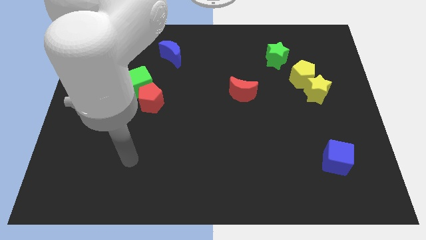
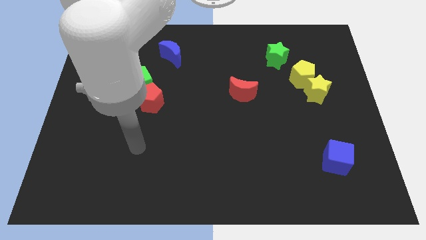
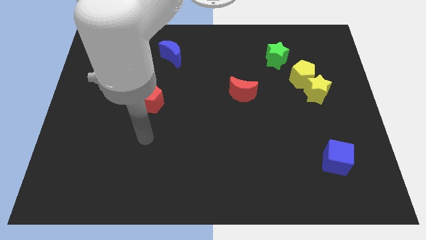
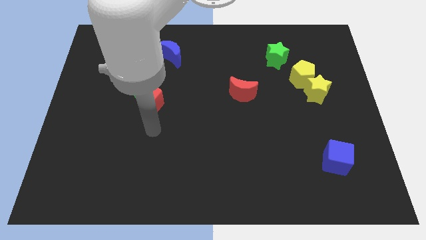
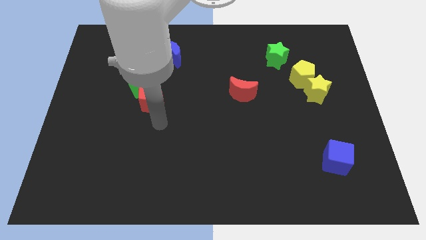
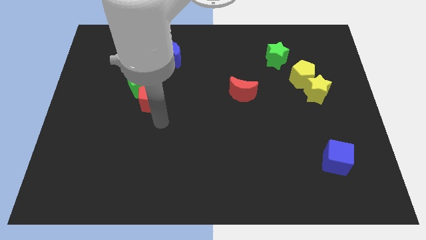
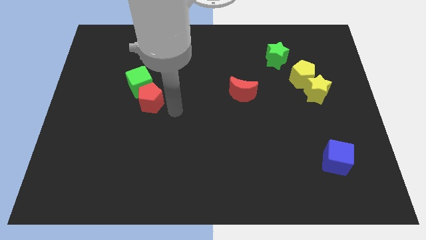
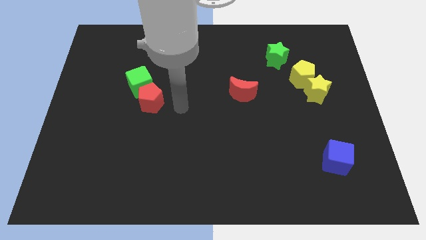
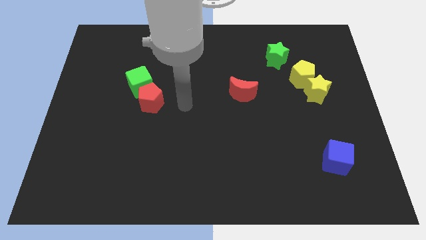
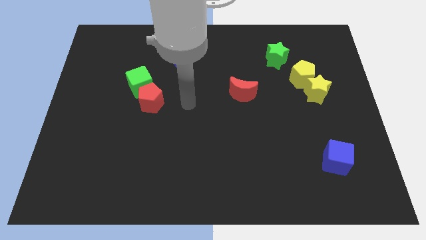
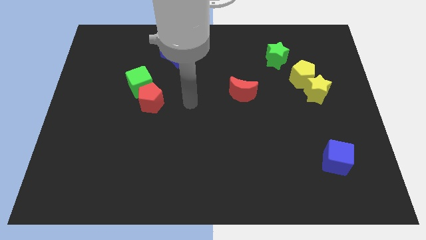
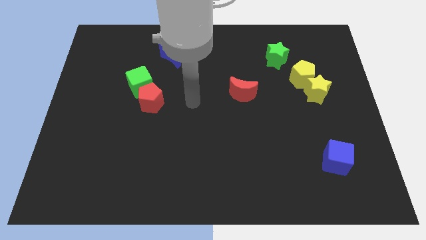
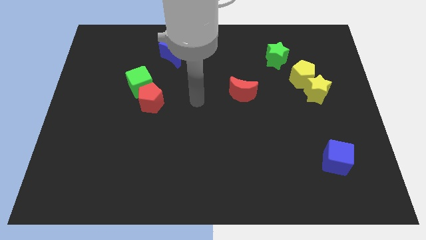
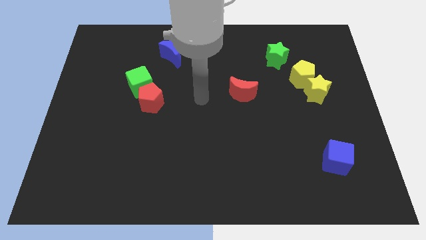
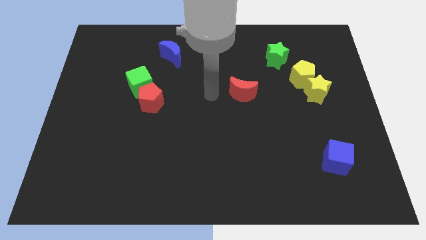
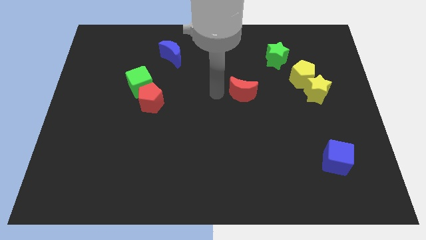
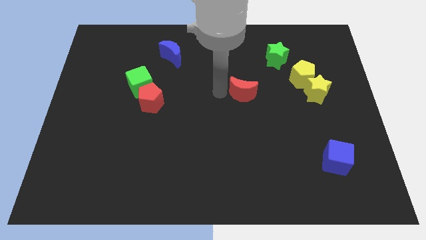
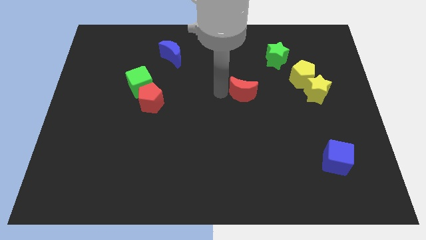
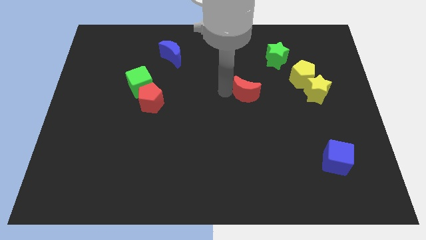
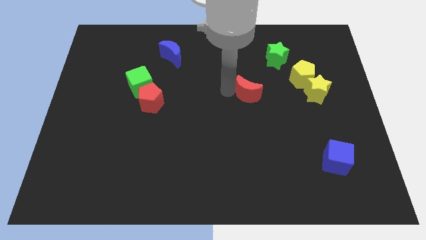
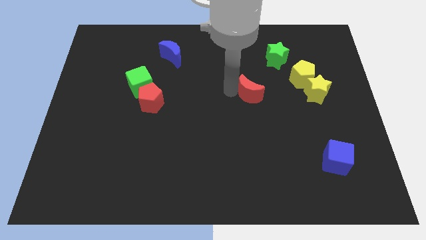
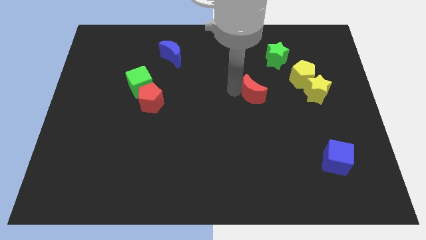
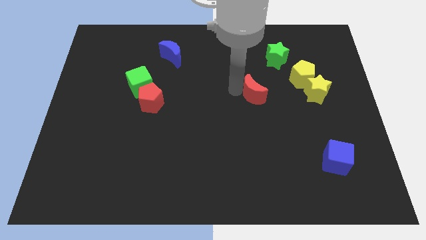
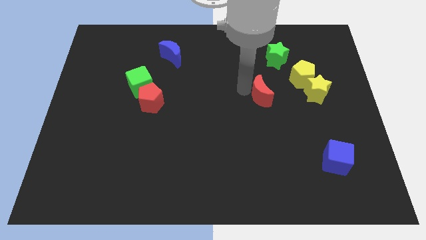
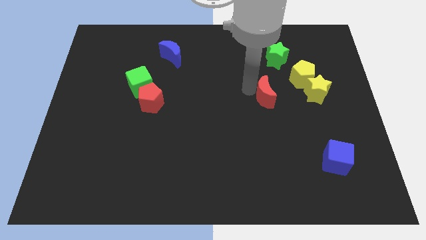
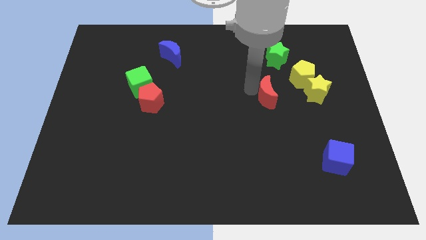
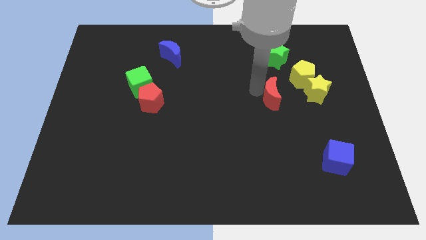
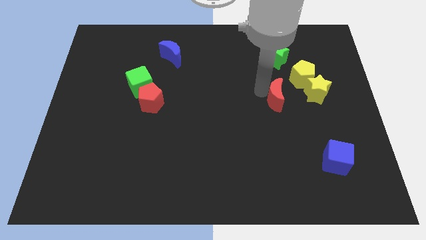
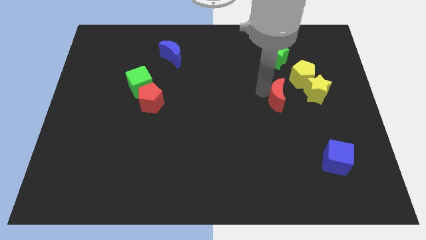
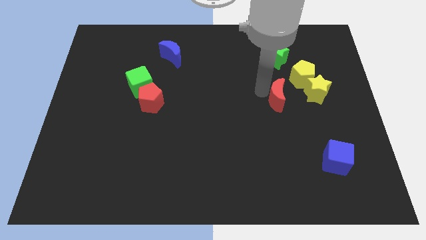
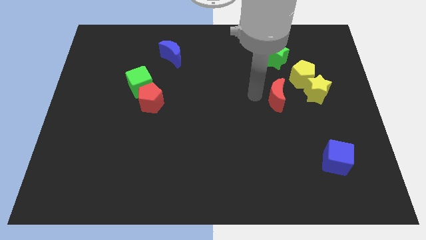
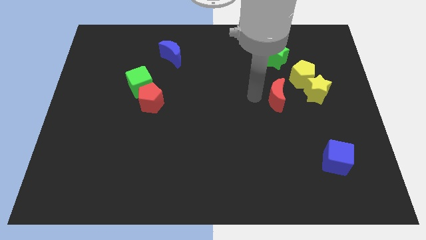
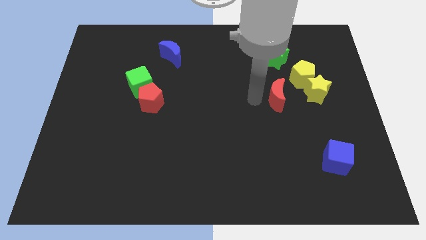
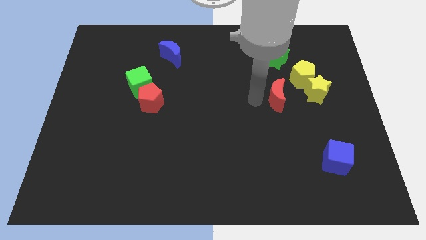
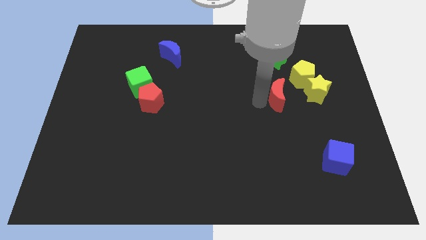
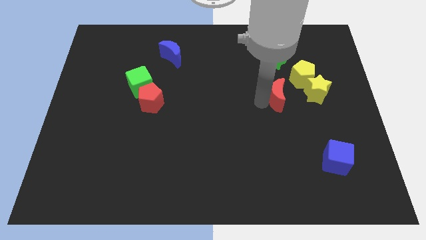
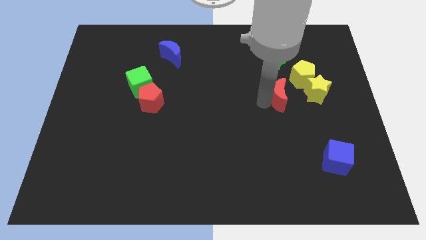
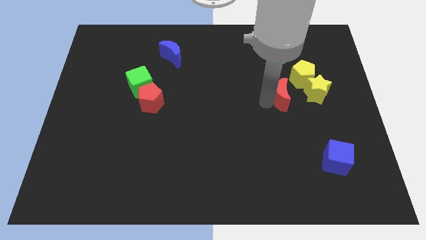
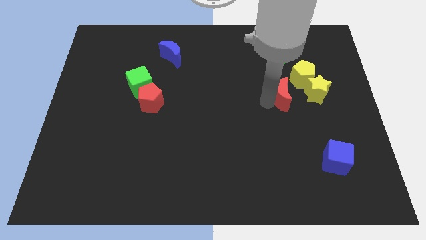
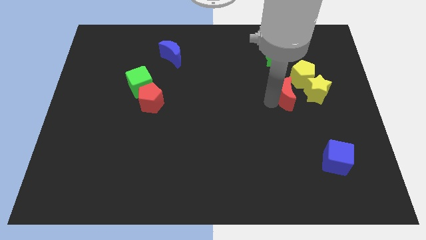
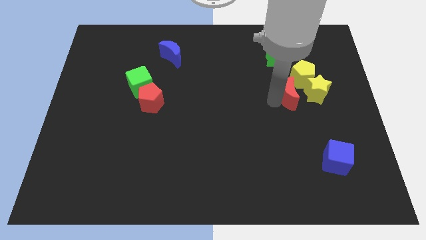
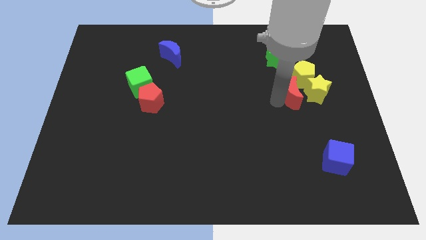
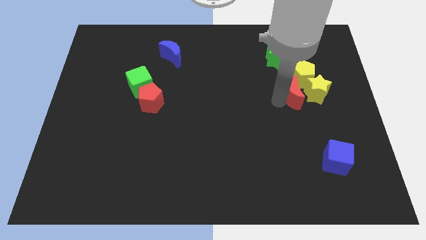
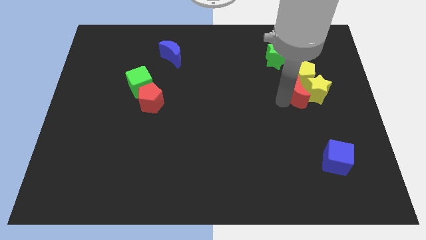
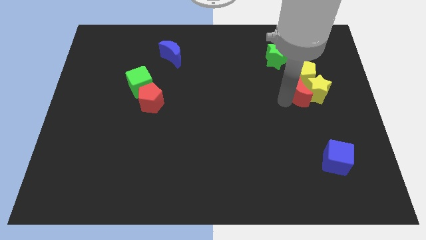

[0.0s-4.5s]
push the red moon to the yellow star

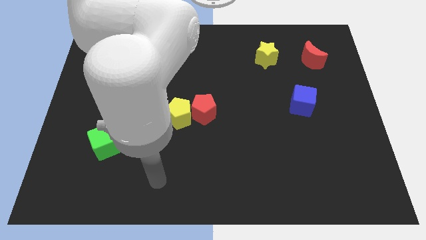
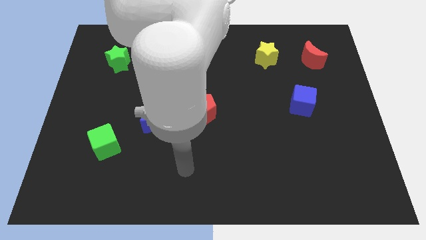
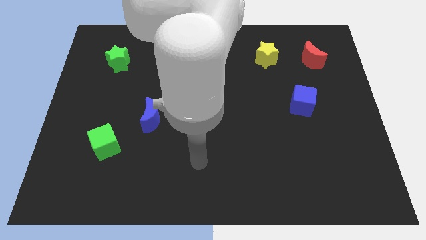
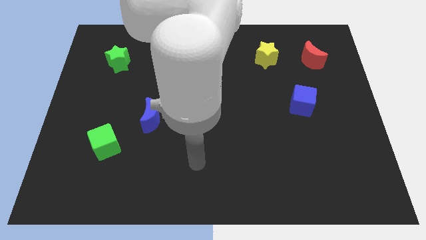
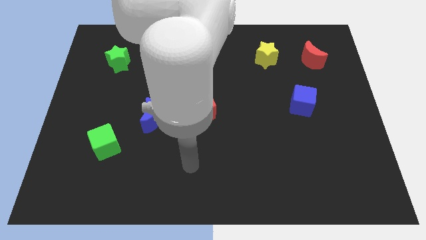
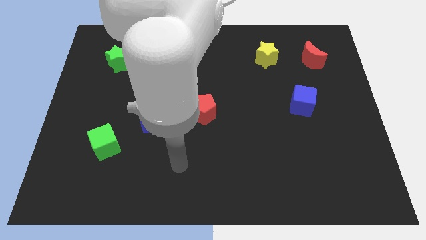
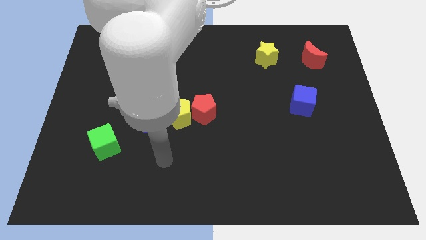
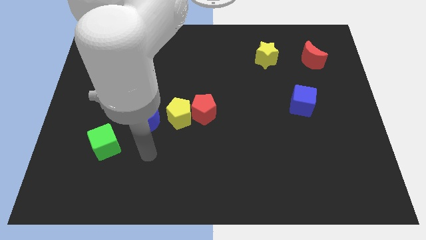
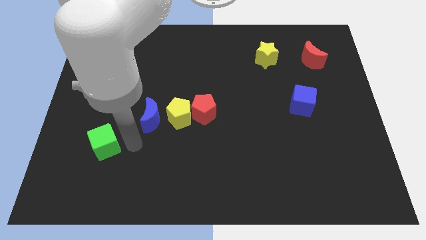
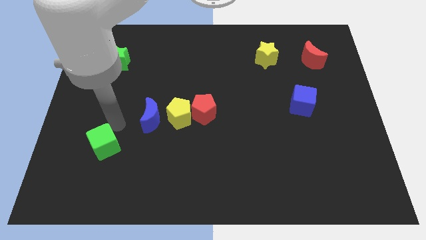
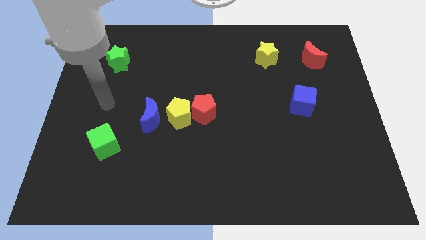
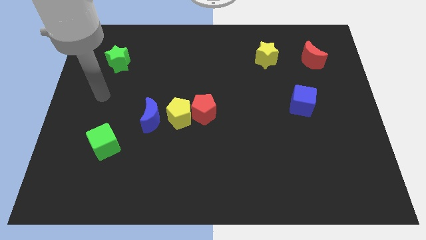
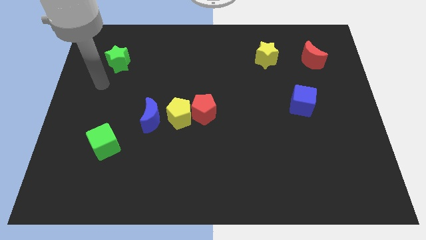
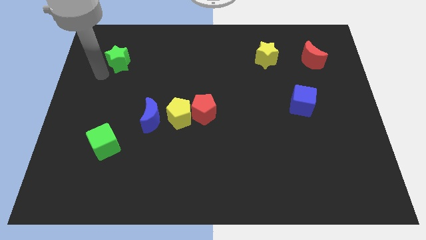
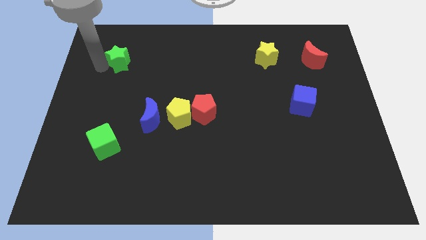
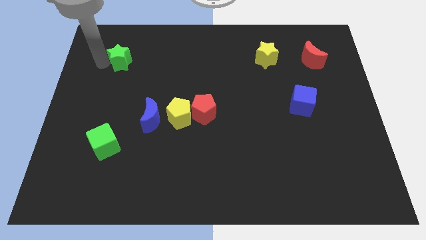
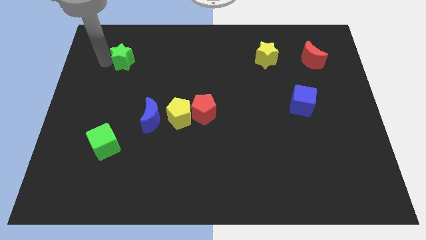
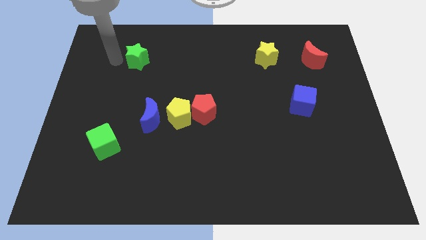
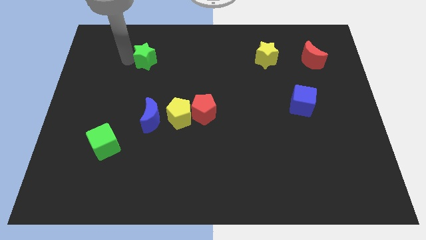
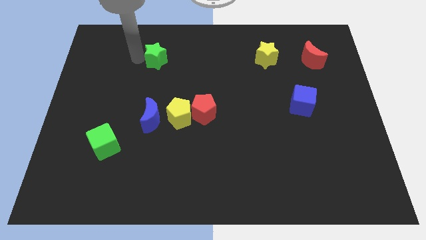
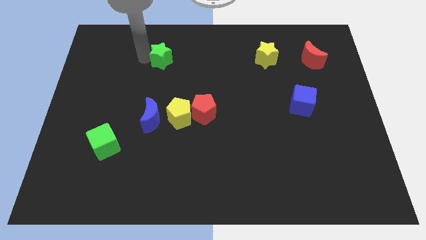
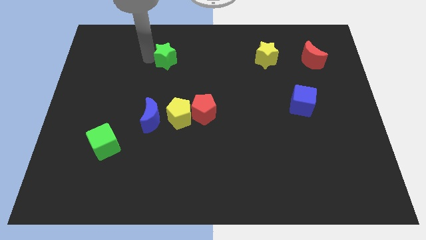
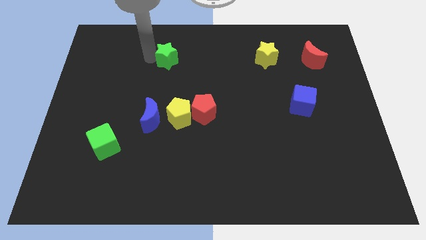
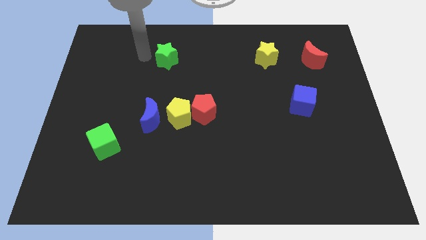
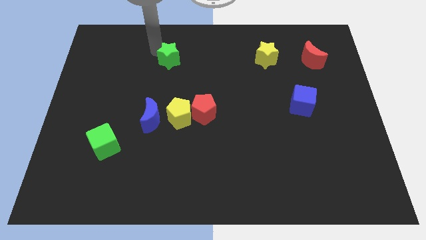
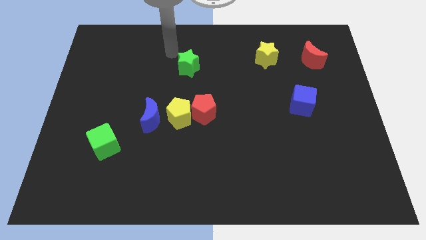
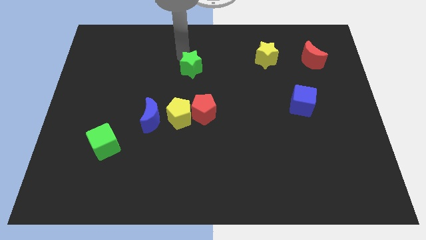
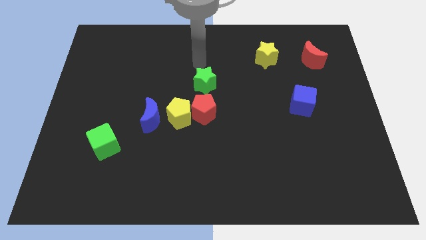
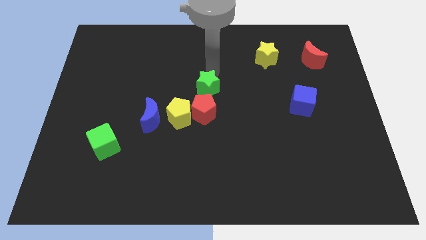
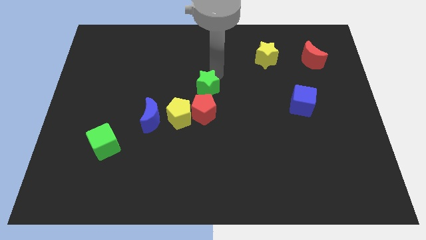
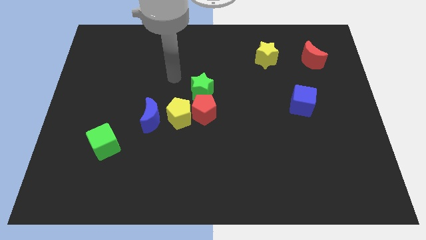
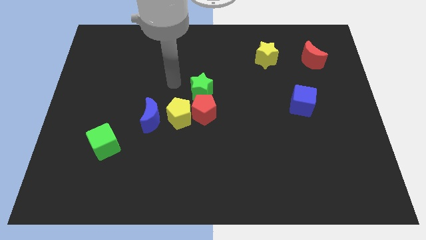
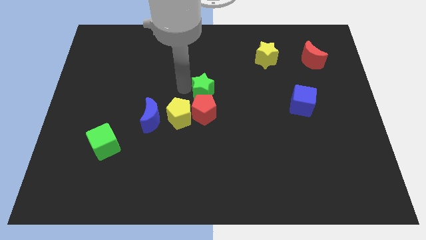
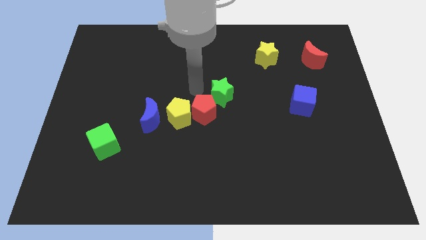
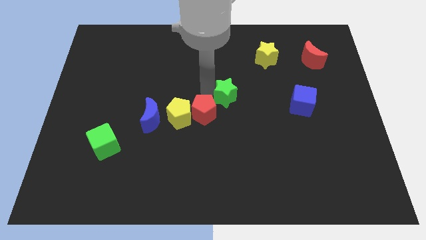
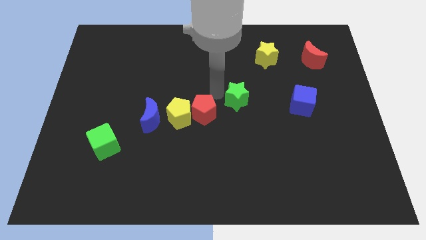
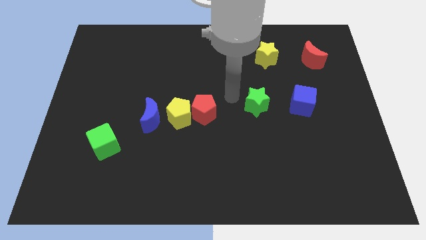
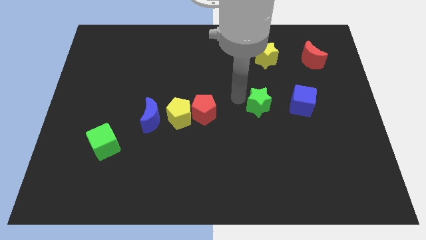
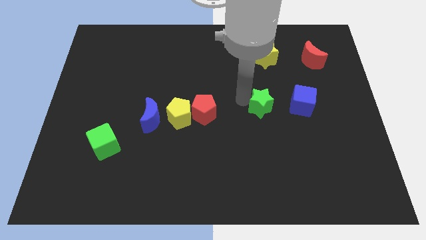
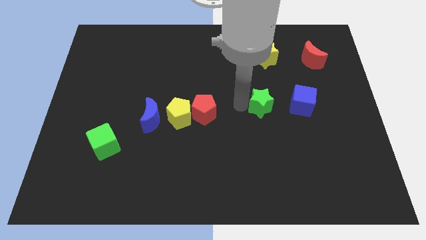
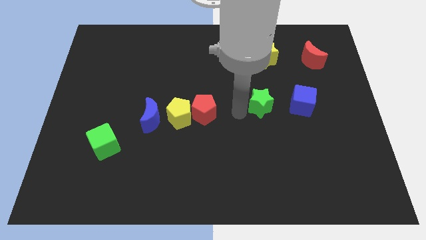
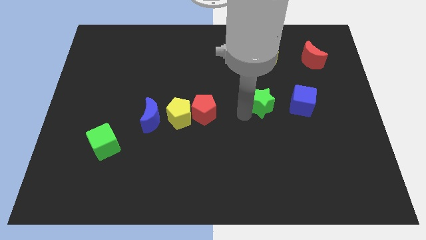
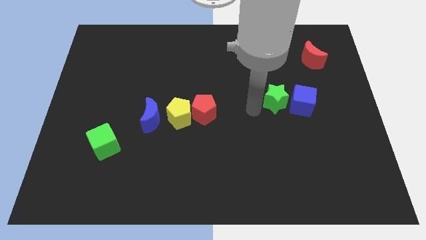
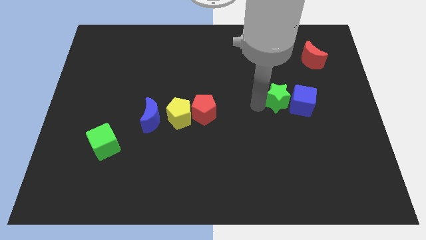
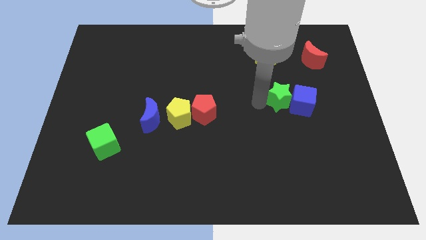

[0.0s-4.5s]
move the green star close to the blue cube
